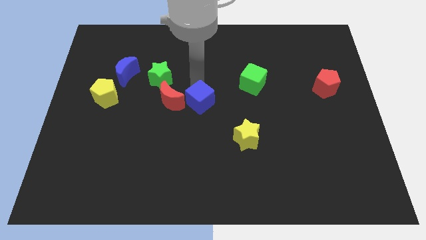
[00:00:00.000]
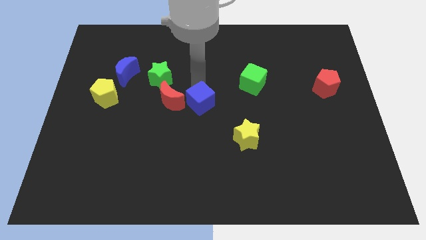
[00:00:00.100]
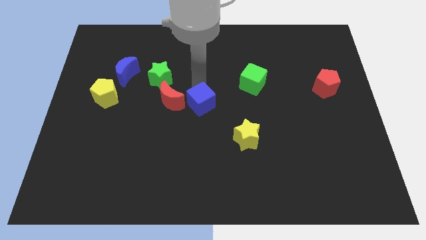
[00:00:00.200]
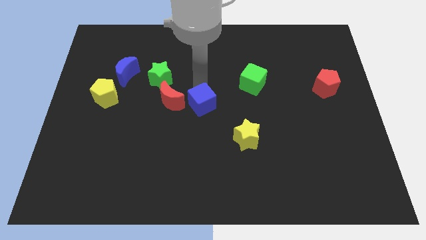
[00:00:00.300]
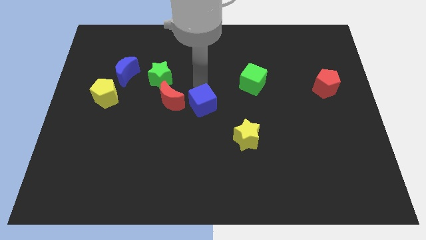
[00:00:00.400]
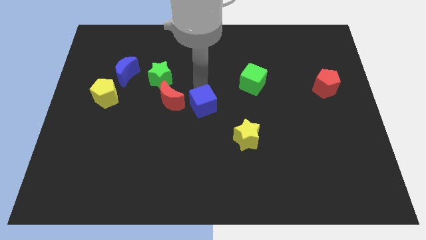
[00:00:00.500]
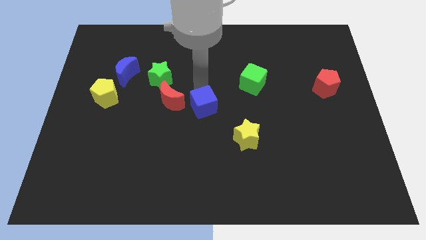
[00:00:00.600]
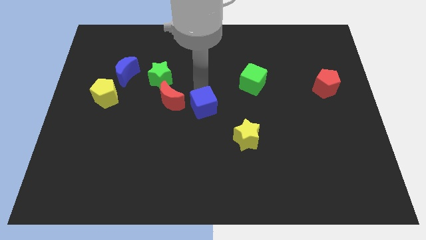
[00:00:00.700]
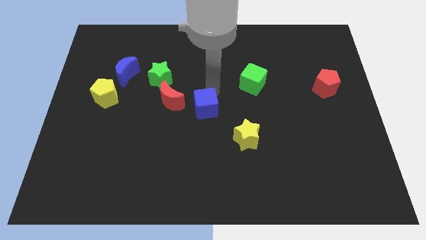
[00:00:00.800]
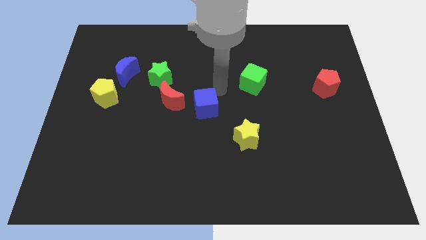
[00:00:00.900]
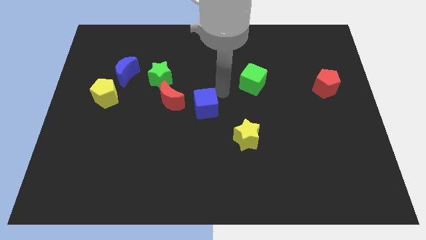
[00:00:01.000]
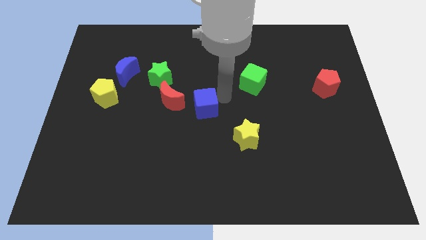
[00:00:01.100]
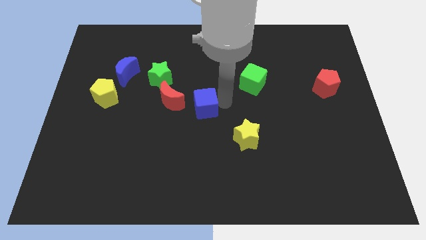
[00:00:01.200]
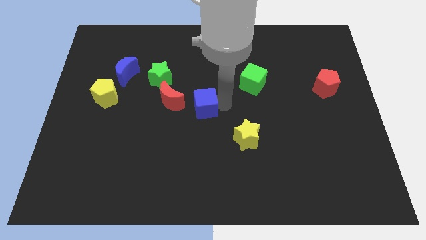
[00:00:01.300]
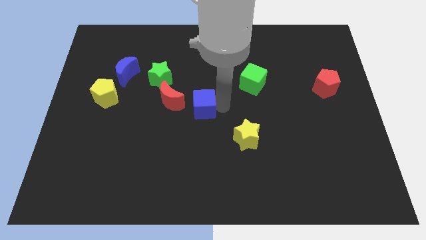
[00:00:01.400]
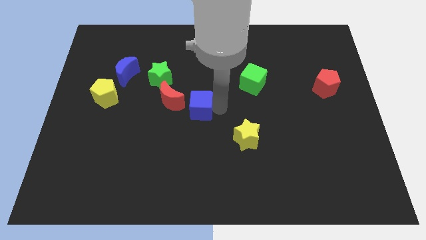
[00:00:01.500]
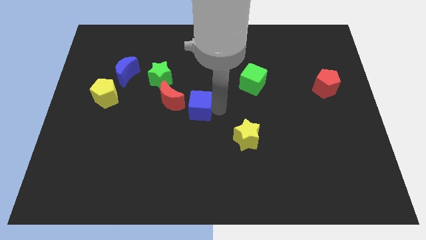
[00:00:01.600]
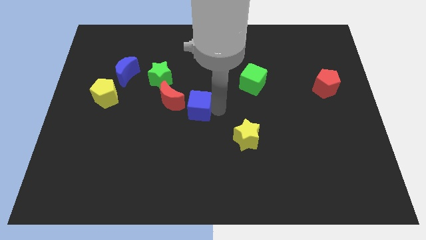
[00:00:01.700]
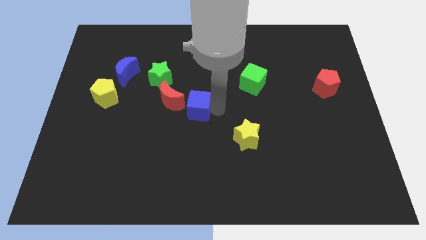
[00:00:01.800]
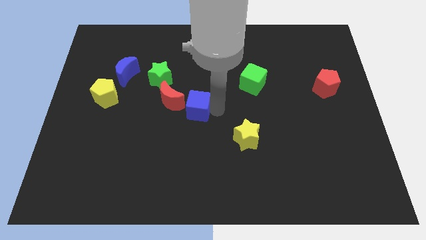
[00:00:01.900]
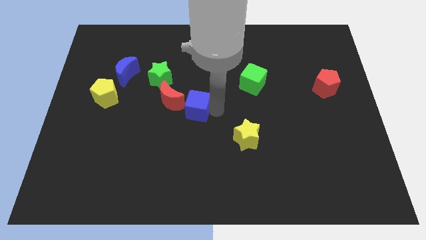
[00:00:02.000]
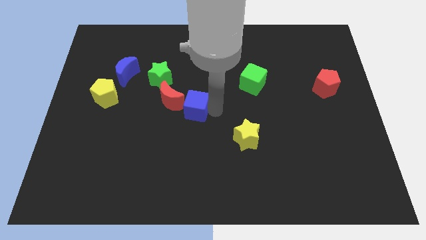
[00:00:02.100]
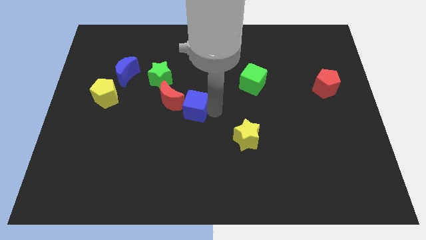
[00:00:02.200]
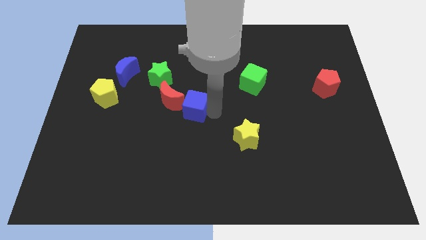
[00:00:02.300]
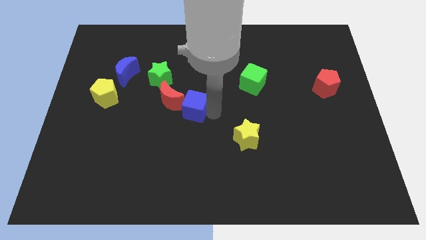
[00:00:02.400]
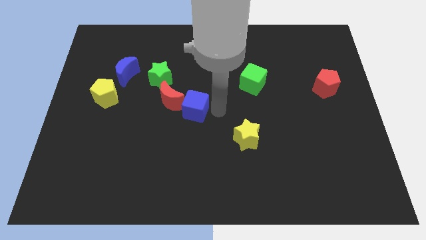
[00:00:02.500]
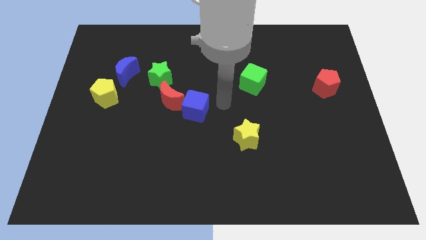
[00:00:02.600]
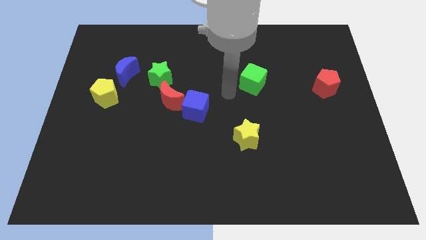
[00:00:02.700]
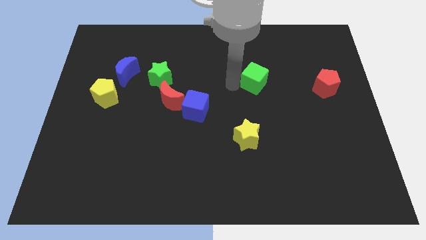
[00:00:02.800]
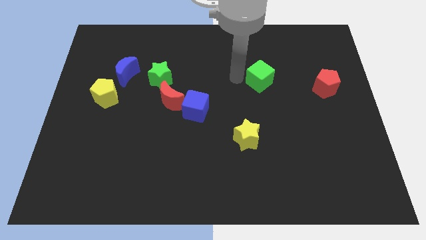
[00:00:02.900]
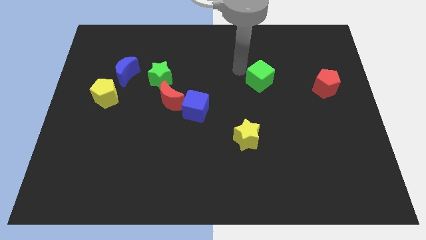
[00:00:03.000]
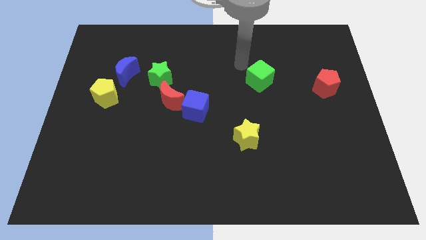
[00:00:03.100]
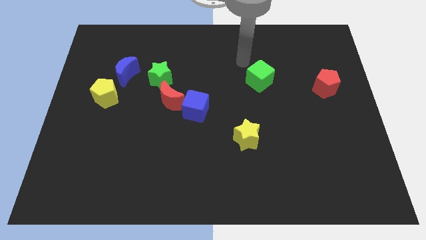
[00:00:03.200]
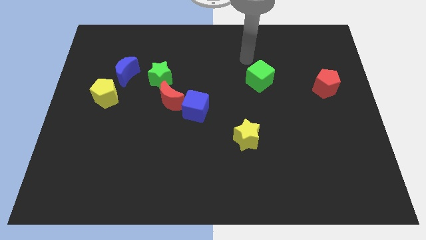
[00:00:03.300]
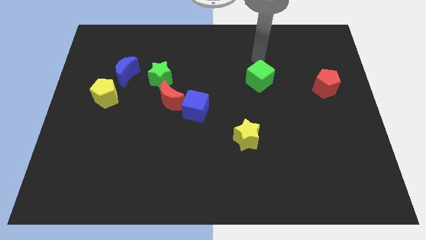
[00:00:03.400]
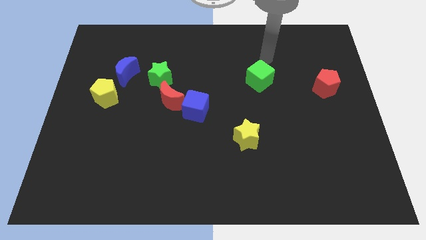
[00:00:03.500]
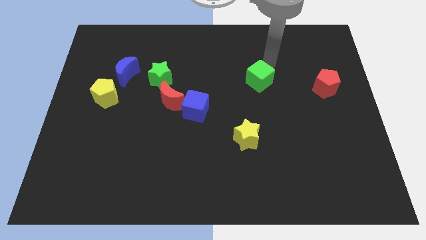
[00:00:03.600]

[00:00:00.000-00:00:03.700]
slightly push the blue cube close to red crescent

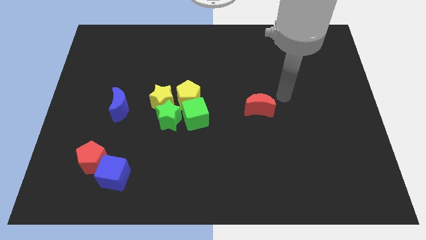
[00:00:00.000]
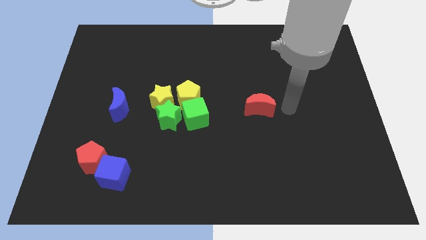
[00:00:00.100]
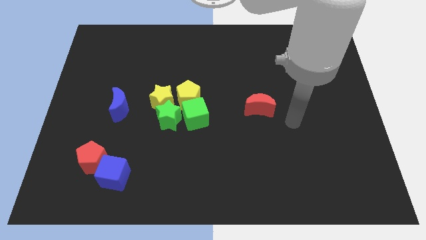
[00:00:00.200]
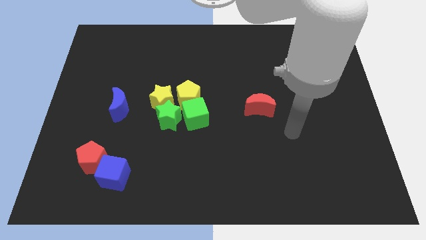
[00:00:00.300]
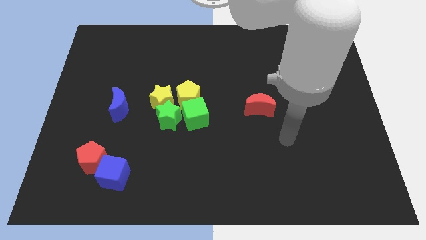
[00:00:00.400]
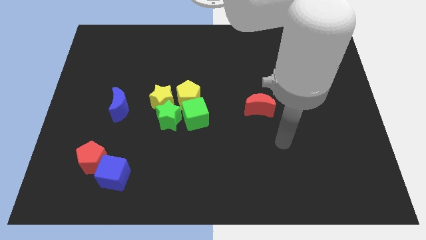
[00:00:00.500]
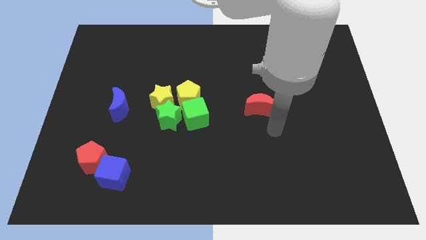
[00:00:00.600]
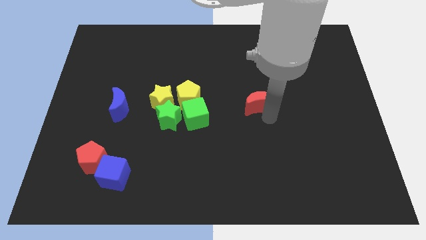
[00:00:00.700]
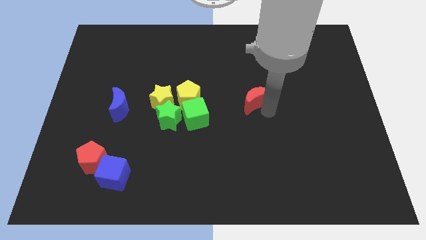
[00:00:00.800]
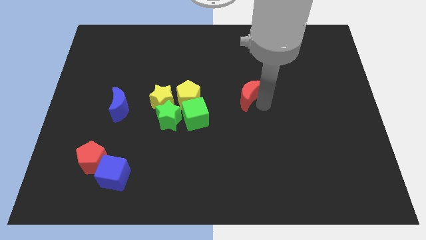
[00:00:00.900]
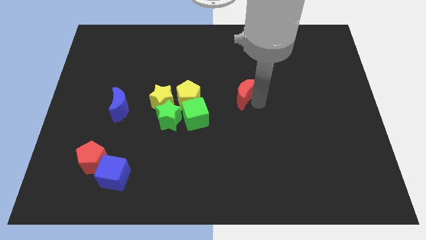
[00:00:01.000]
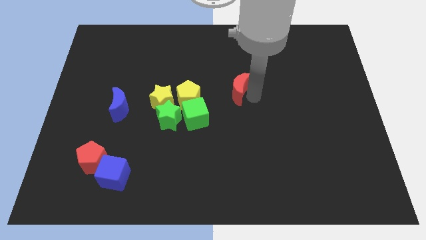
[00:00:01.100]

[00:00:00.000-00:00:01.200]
push the red crescent slightly top right

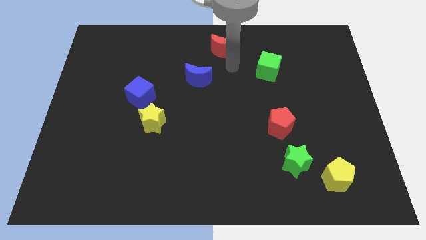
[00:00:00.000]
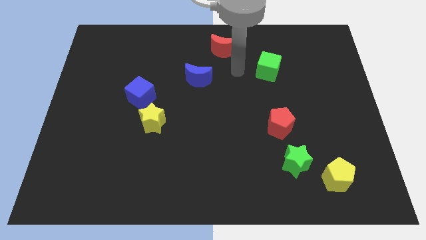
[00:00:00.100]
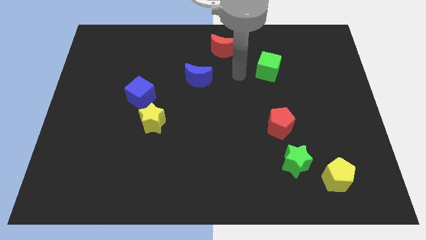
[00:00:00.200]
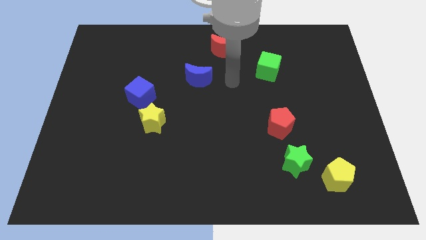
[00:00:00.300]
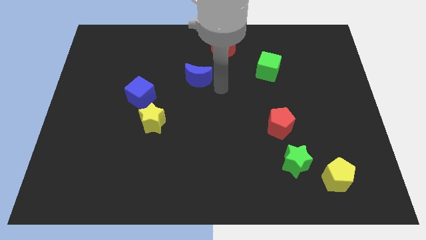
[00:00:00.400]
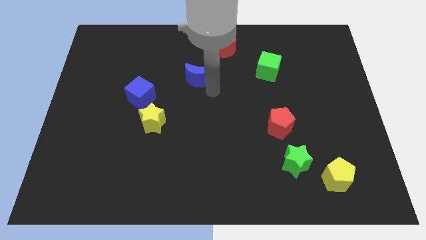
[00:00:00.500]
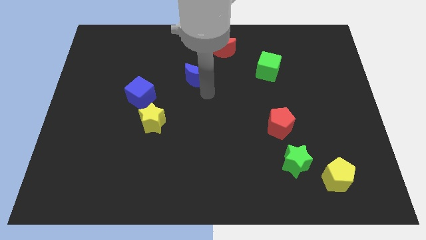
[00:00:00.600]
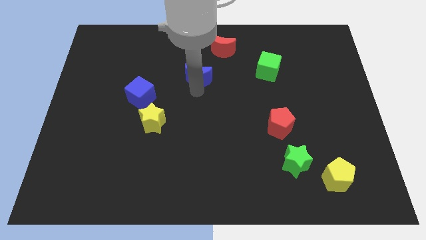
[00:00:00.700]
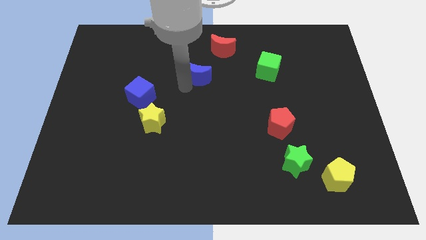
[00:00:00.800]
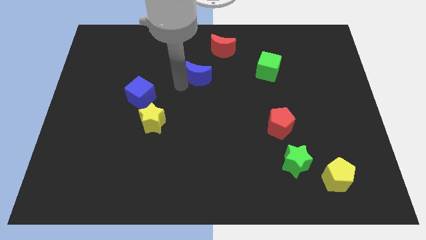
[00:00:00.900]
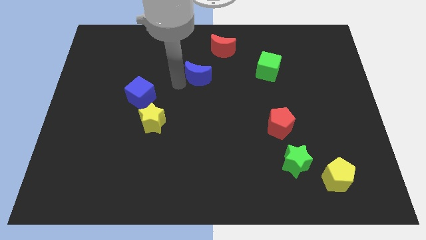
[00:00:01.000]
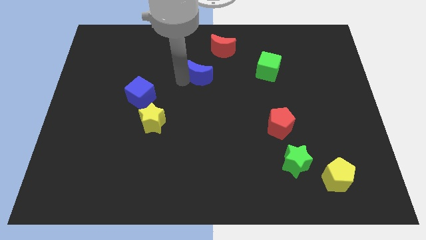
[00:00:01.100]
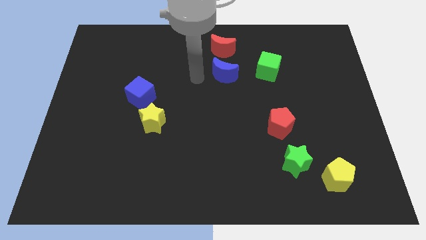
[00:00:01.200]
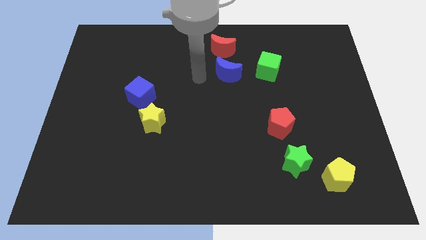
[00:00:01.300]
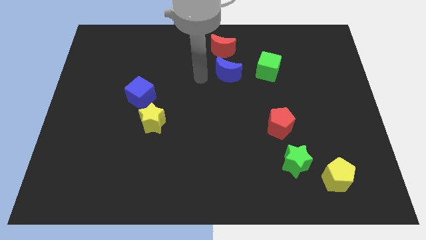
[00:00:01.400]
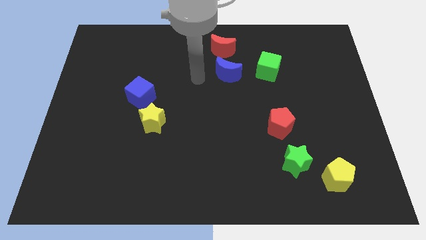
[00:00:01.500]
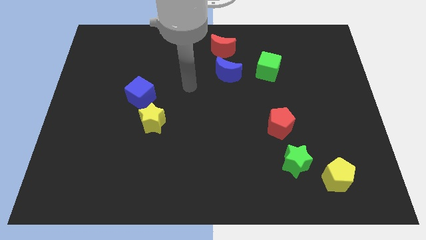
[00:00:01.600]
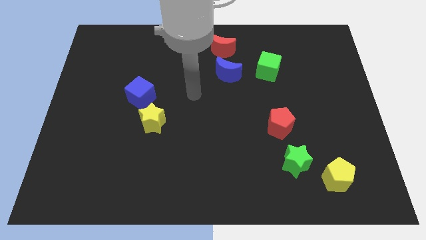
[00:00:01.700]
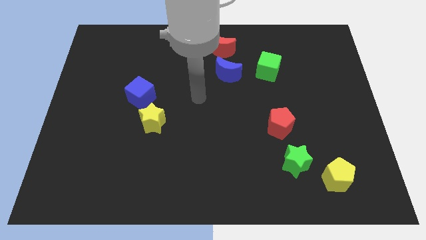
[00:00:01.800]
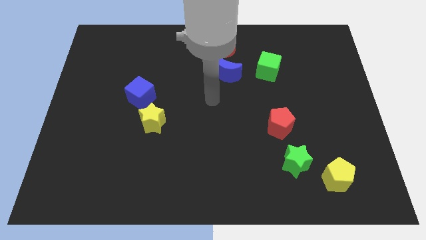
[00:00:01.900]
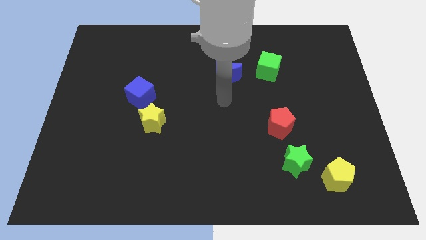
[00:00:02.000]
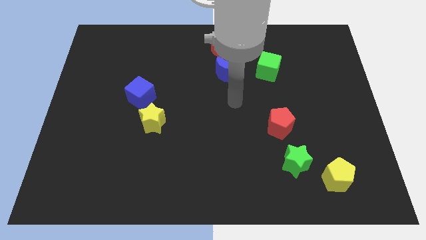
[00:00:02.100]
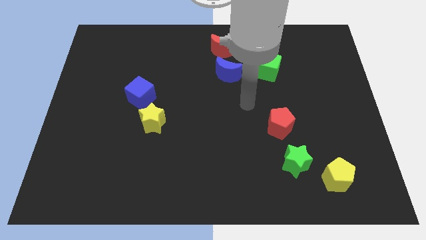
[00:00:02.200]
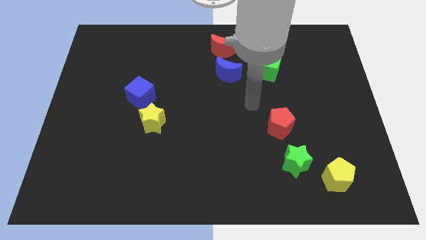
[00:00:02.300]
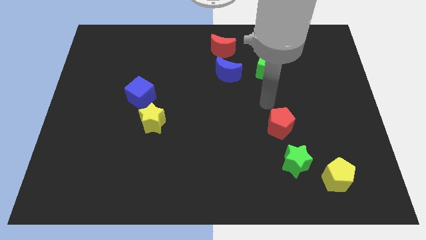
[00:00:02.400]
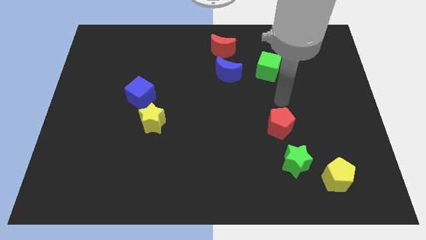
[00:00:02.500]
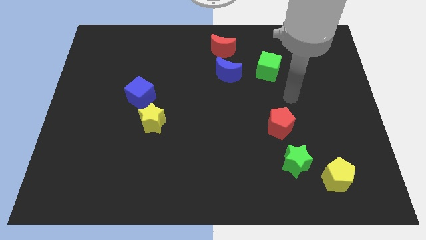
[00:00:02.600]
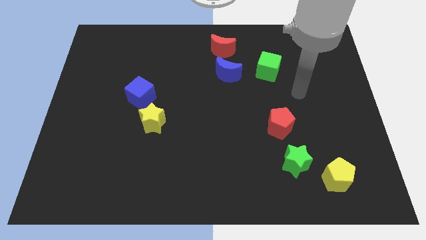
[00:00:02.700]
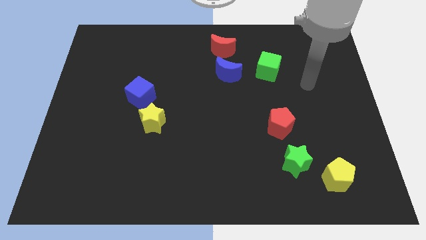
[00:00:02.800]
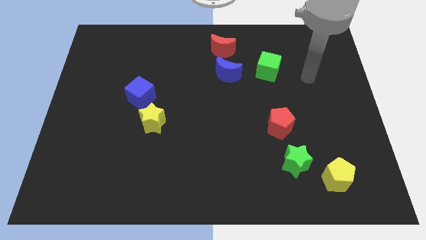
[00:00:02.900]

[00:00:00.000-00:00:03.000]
place the blue moon in between the red pentagon and red moon

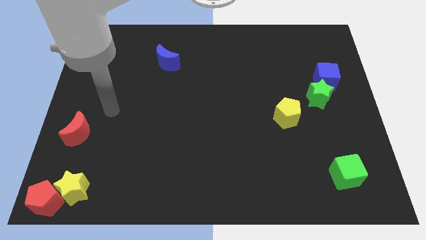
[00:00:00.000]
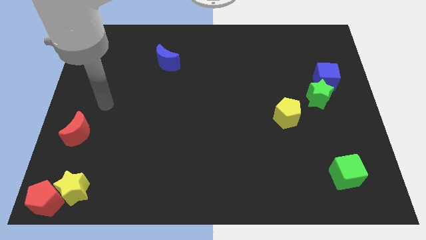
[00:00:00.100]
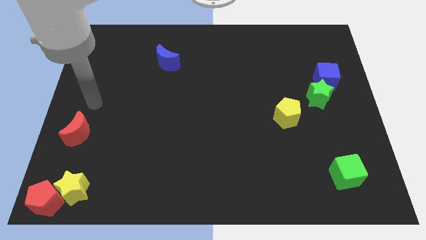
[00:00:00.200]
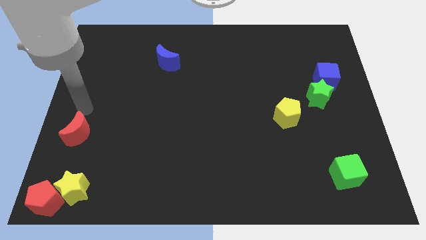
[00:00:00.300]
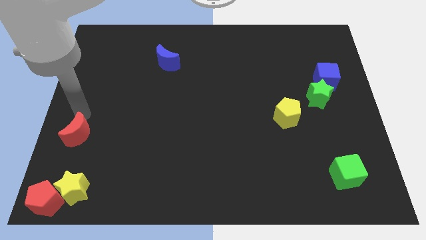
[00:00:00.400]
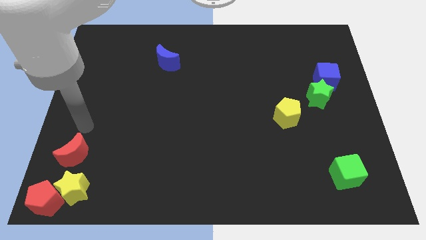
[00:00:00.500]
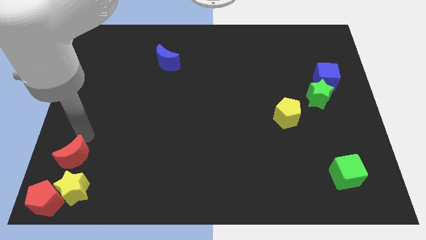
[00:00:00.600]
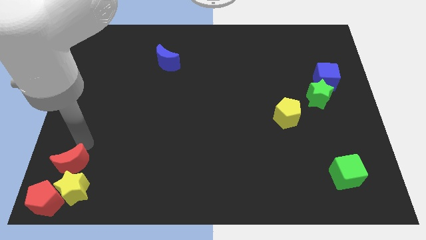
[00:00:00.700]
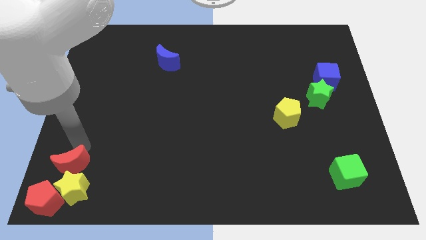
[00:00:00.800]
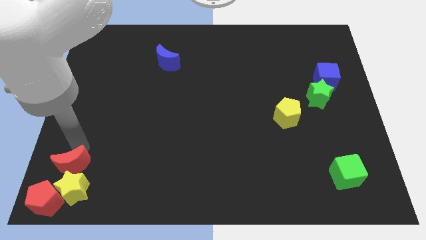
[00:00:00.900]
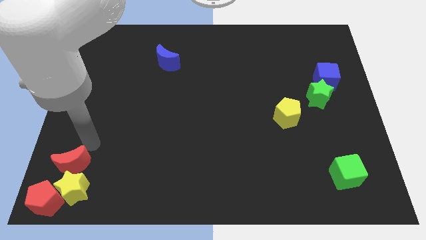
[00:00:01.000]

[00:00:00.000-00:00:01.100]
place the red moon above the yellow star
